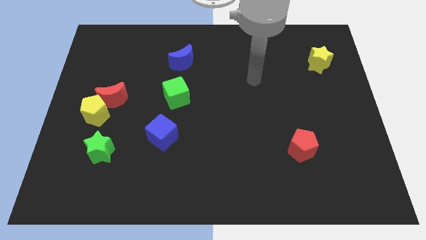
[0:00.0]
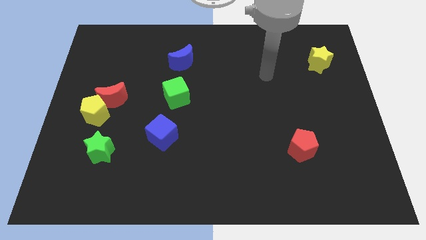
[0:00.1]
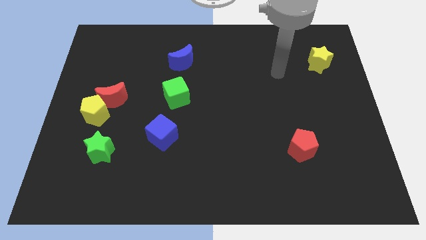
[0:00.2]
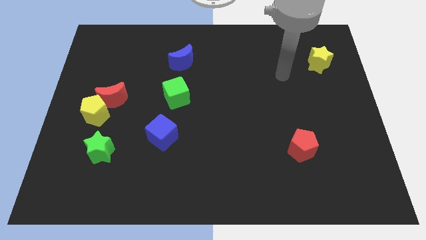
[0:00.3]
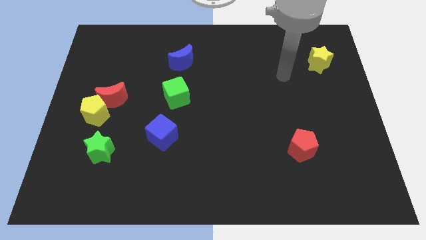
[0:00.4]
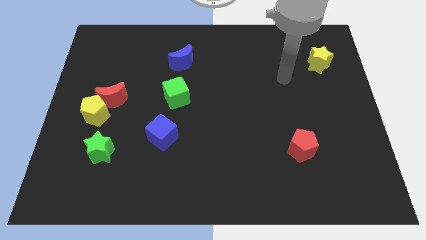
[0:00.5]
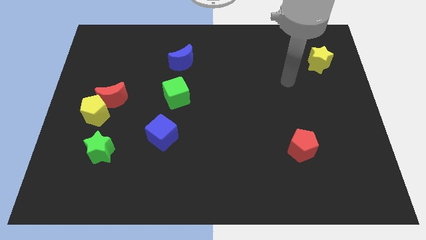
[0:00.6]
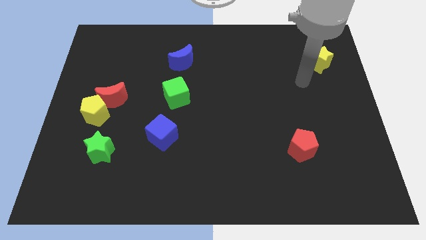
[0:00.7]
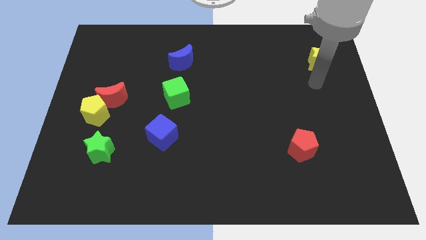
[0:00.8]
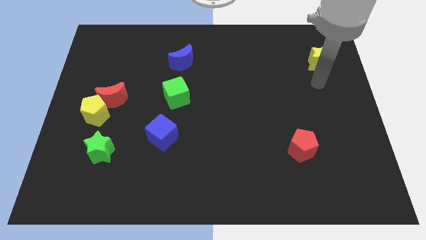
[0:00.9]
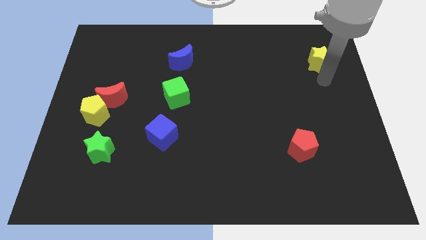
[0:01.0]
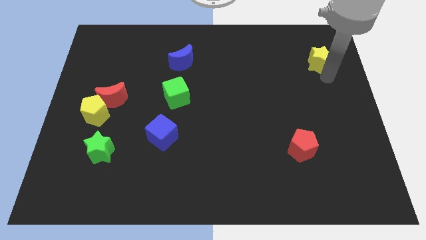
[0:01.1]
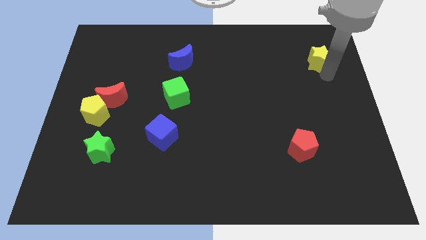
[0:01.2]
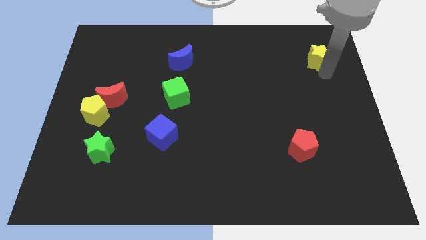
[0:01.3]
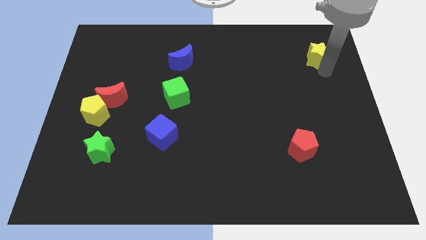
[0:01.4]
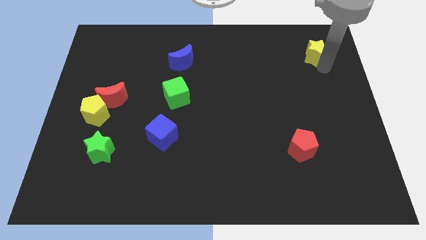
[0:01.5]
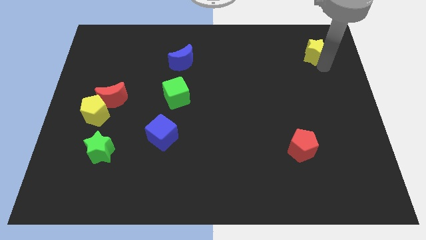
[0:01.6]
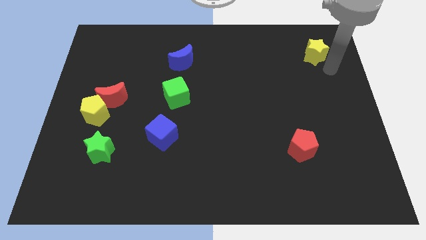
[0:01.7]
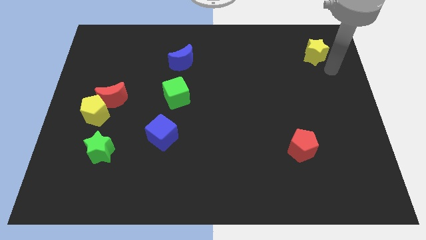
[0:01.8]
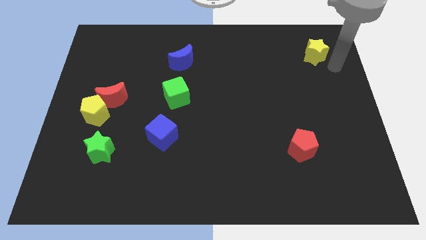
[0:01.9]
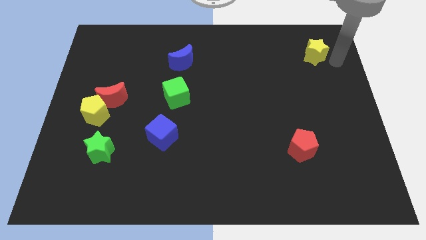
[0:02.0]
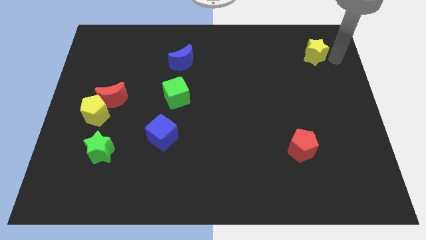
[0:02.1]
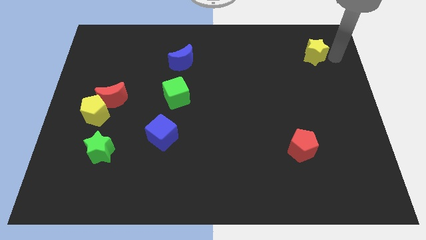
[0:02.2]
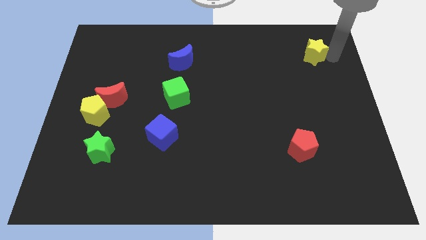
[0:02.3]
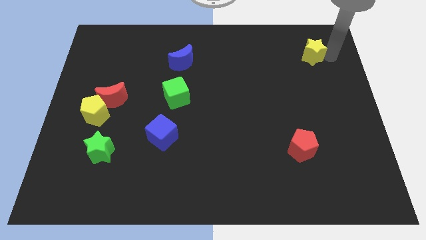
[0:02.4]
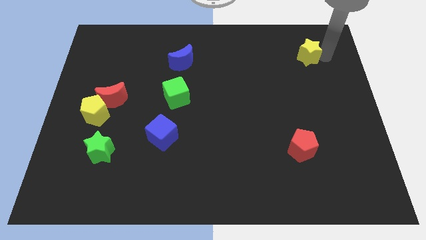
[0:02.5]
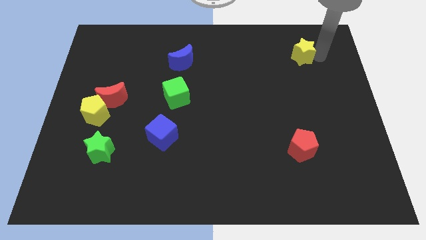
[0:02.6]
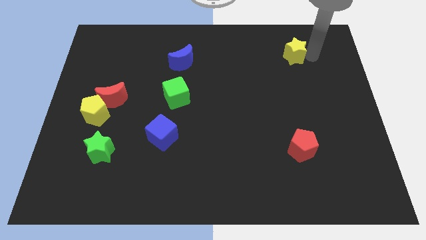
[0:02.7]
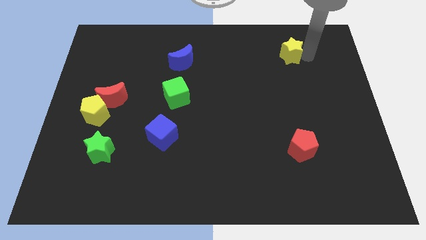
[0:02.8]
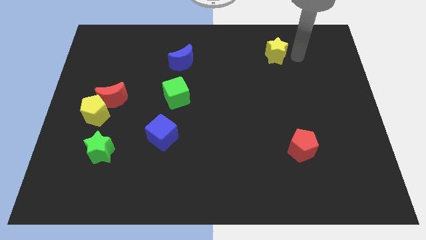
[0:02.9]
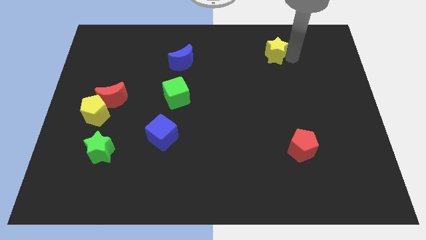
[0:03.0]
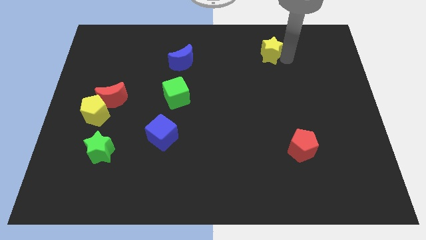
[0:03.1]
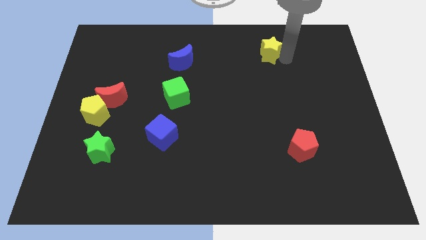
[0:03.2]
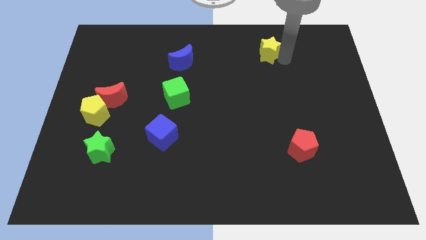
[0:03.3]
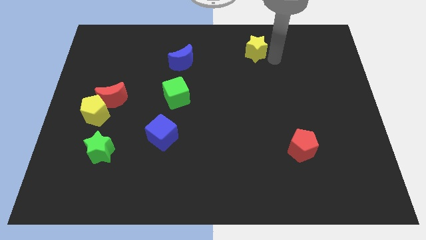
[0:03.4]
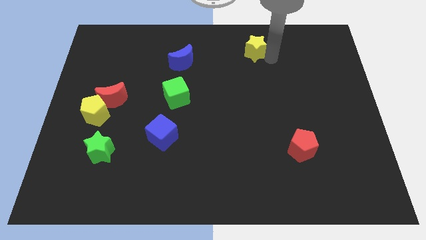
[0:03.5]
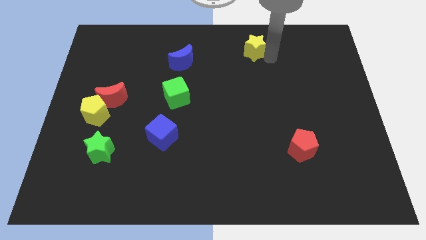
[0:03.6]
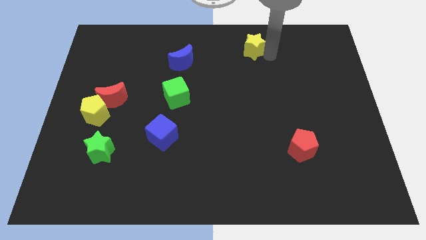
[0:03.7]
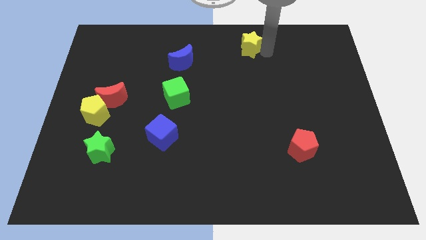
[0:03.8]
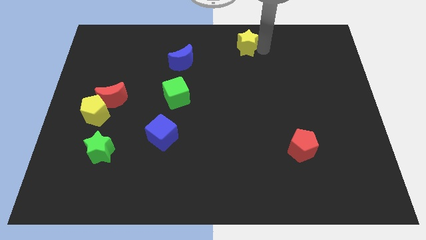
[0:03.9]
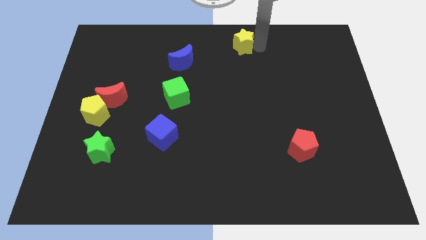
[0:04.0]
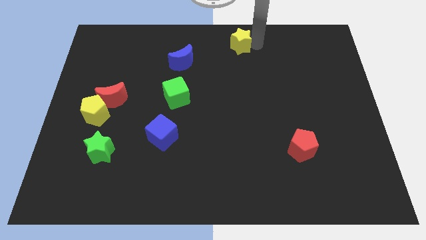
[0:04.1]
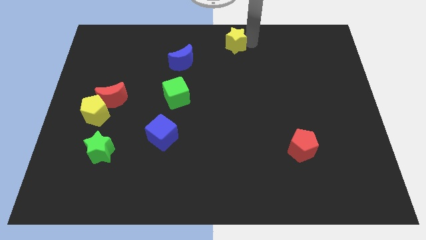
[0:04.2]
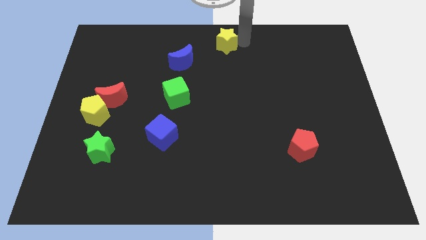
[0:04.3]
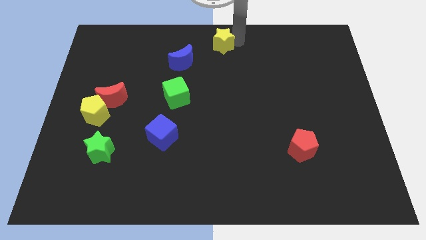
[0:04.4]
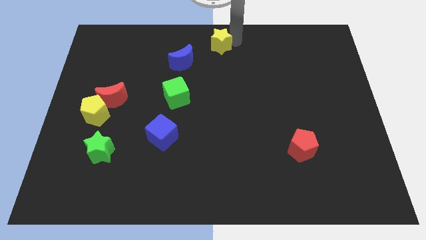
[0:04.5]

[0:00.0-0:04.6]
place the yellow star at the top center of the board

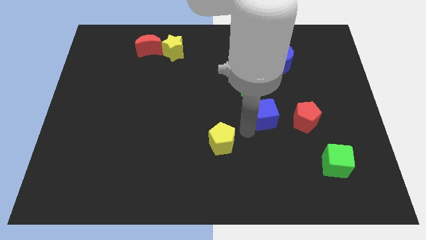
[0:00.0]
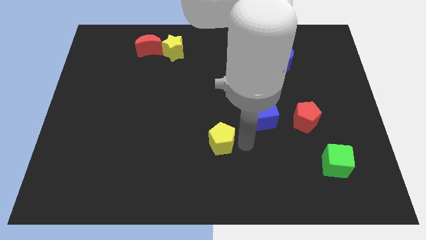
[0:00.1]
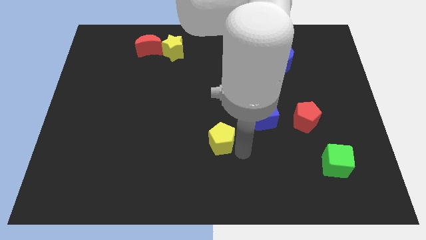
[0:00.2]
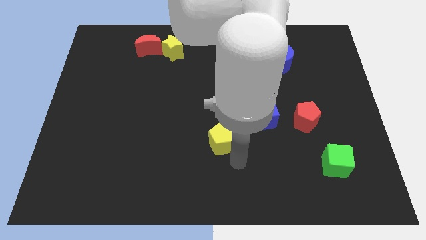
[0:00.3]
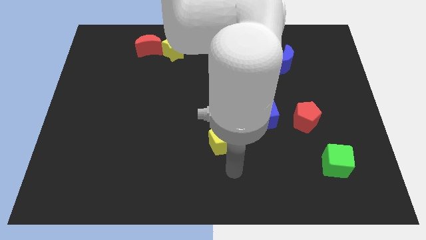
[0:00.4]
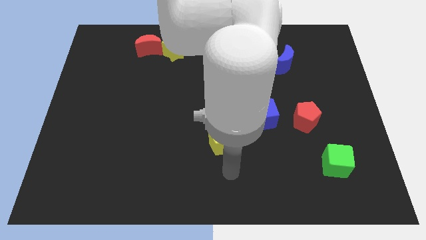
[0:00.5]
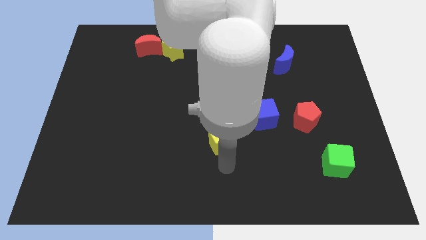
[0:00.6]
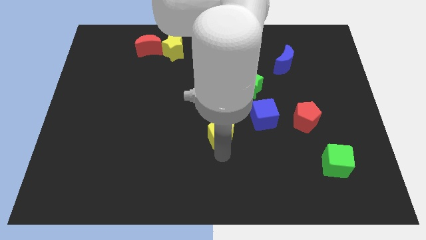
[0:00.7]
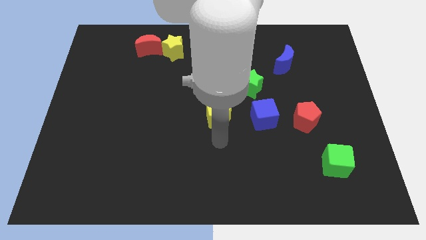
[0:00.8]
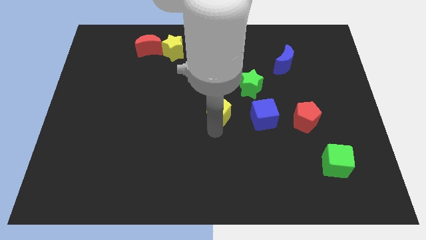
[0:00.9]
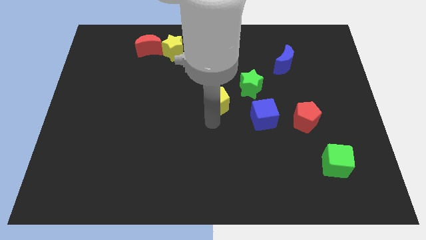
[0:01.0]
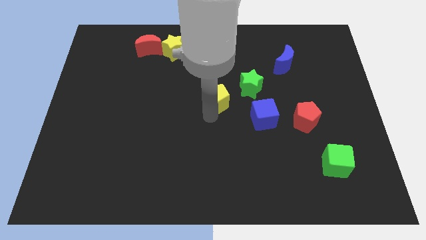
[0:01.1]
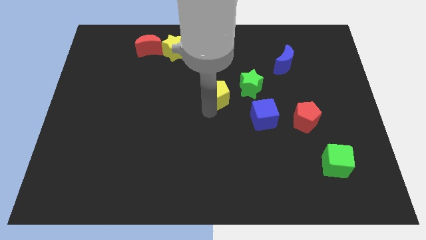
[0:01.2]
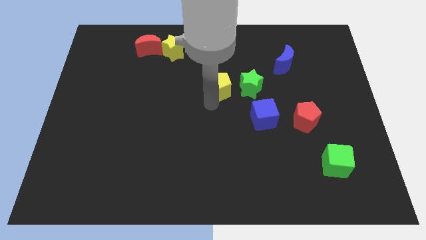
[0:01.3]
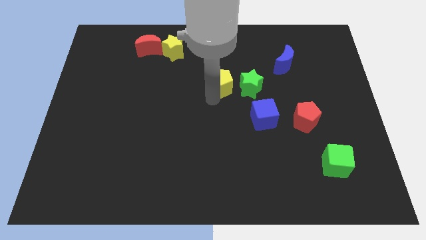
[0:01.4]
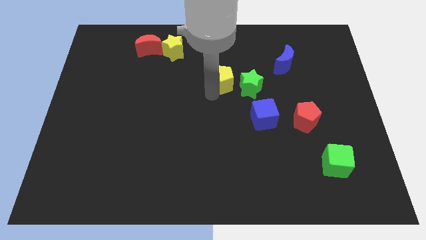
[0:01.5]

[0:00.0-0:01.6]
move the yellow pentagon to the left of the green star

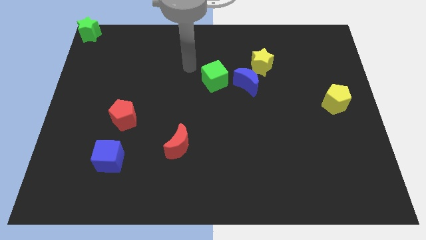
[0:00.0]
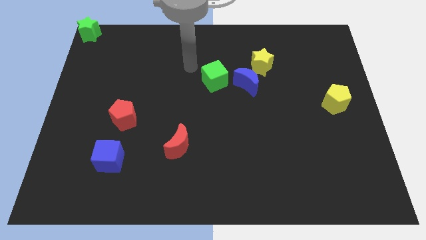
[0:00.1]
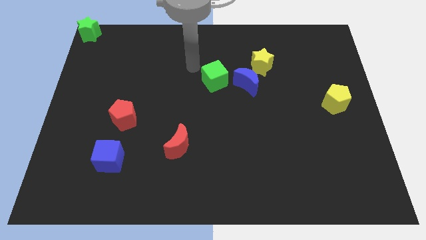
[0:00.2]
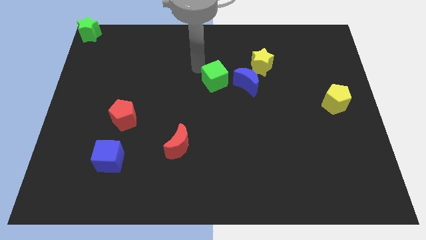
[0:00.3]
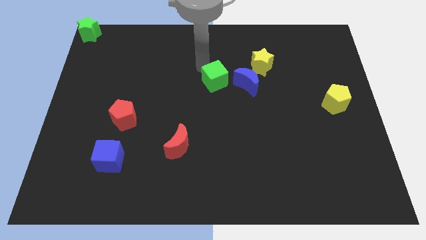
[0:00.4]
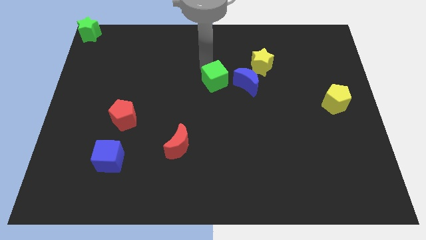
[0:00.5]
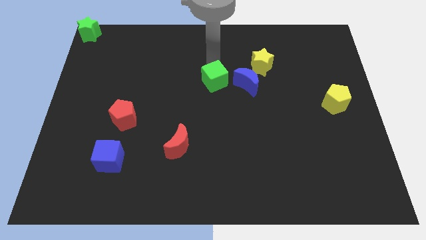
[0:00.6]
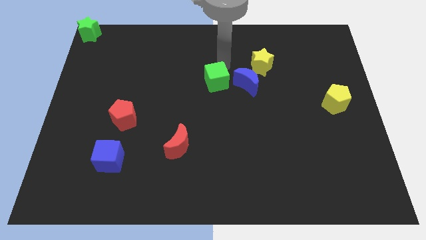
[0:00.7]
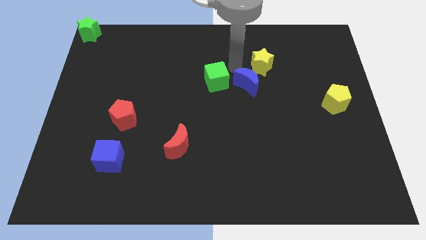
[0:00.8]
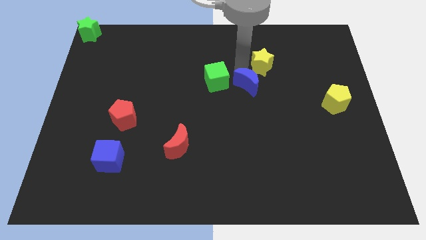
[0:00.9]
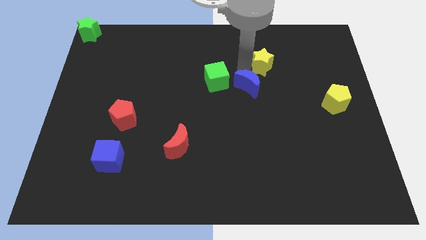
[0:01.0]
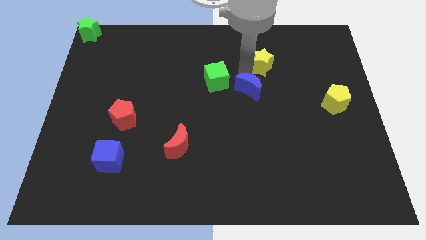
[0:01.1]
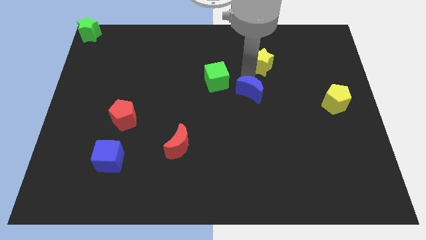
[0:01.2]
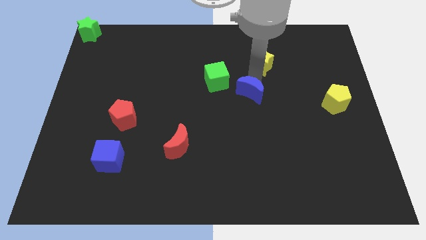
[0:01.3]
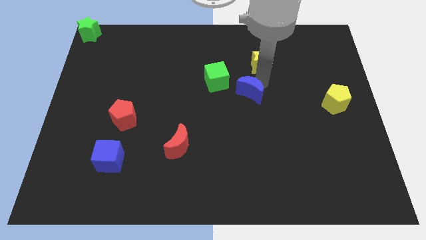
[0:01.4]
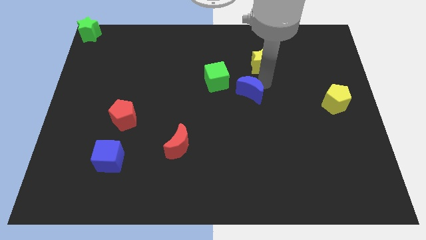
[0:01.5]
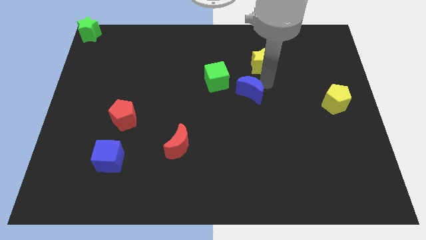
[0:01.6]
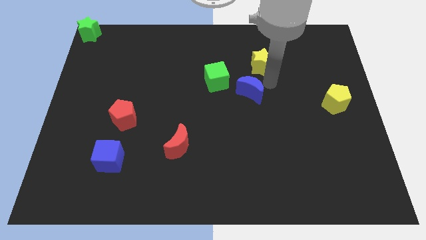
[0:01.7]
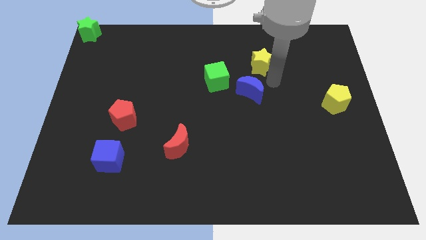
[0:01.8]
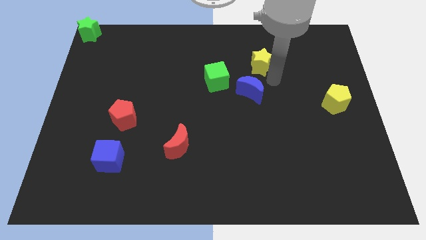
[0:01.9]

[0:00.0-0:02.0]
separate yellow star from blue moon

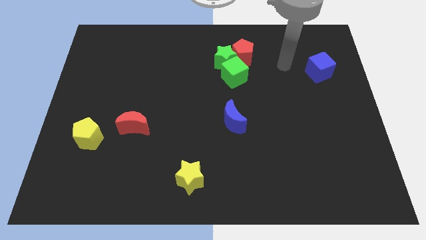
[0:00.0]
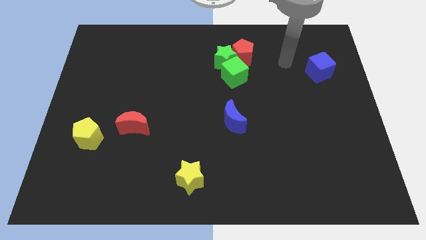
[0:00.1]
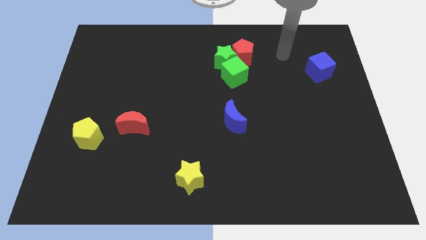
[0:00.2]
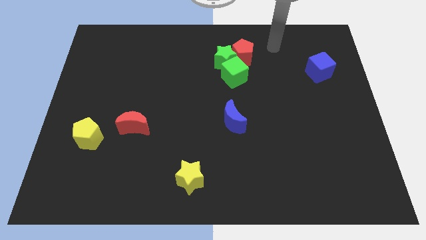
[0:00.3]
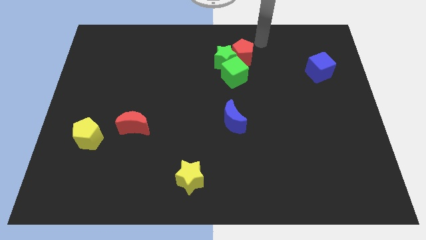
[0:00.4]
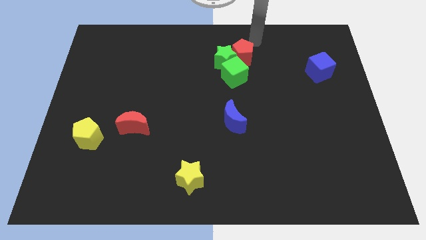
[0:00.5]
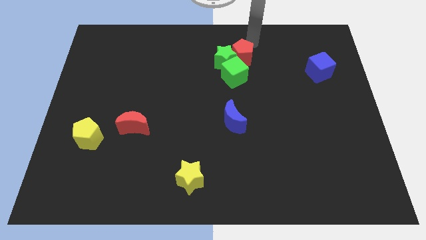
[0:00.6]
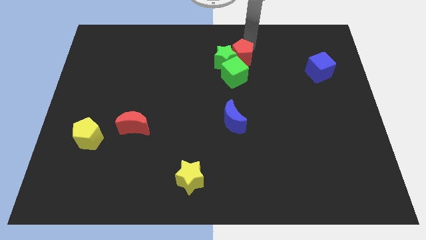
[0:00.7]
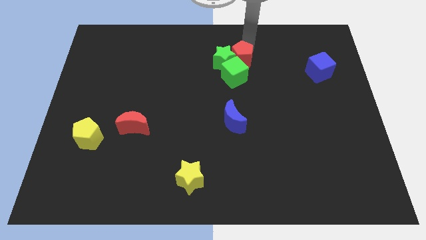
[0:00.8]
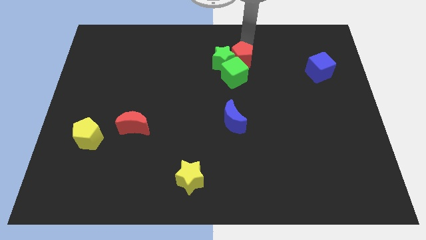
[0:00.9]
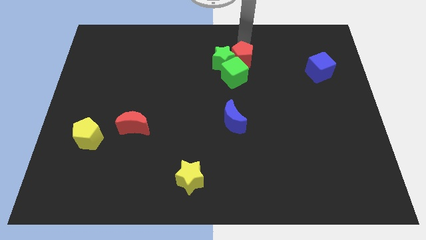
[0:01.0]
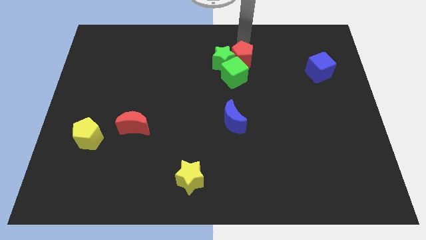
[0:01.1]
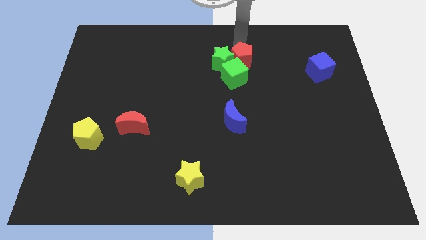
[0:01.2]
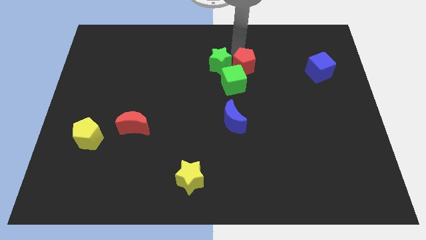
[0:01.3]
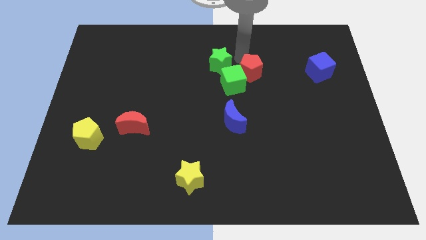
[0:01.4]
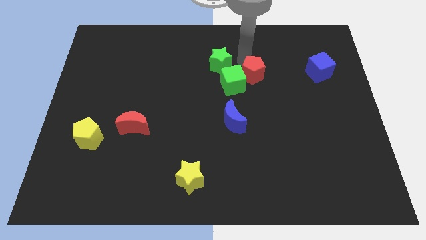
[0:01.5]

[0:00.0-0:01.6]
slightly disturb the green star and green cube with red pentagon
